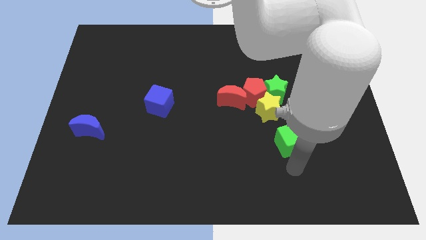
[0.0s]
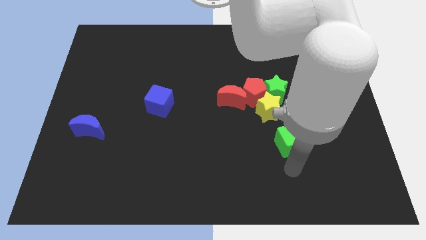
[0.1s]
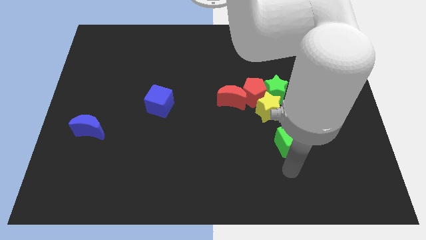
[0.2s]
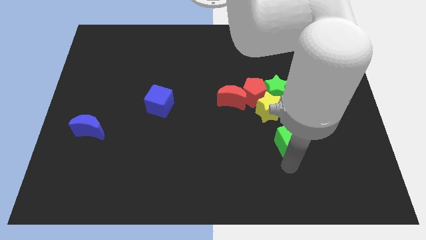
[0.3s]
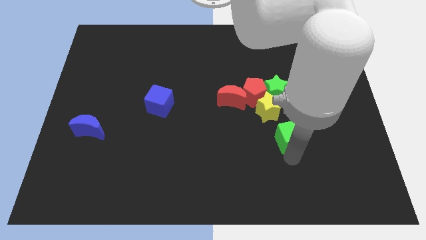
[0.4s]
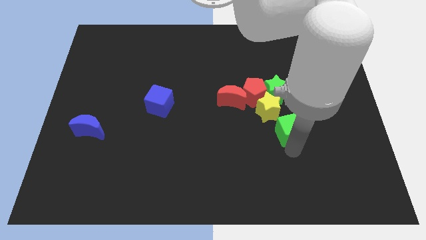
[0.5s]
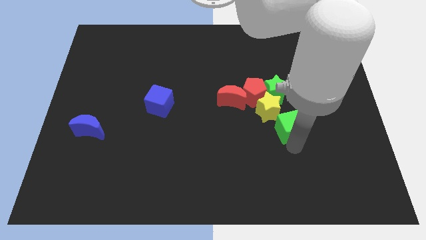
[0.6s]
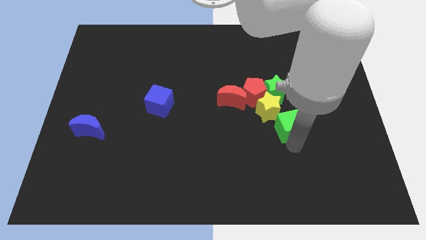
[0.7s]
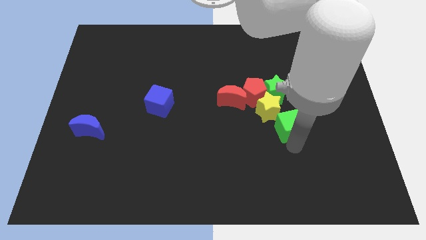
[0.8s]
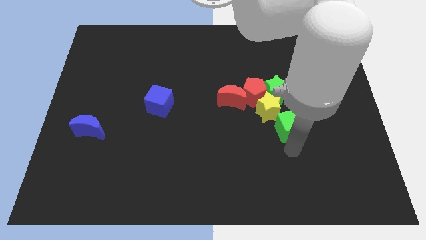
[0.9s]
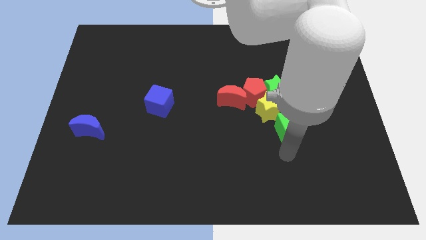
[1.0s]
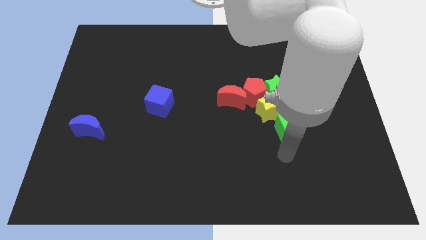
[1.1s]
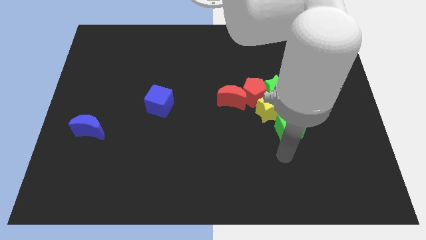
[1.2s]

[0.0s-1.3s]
take the green cube close to the yellow star

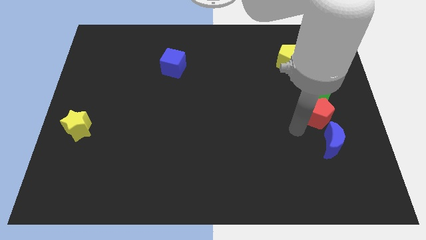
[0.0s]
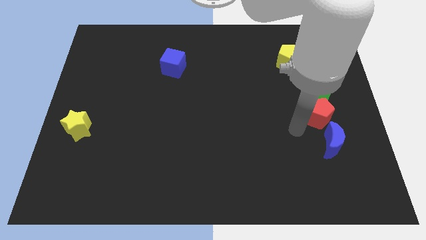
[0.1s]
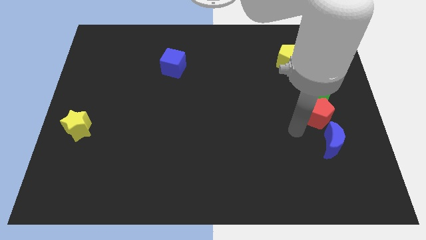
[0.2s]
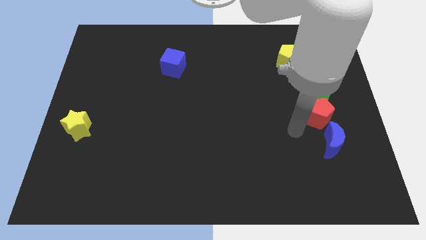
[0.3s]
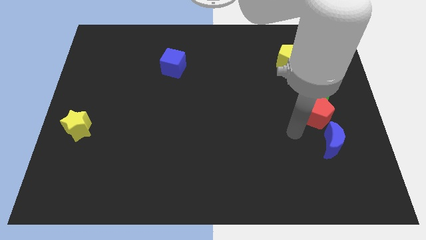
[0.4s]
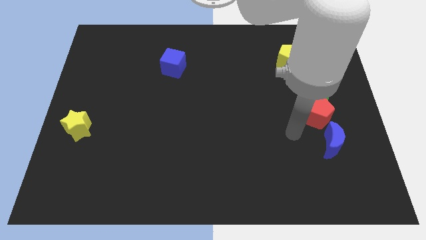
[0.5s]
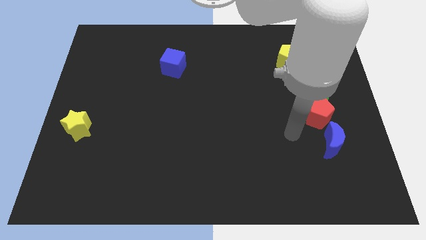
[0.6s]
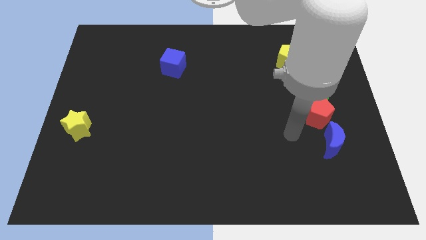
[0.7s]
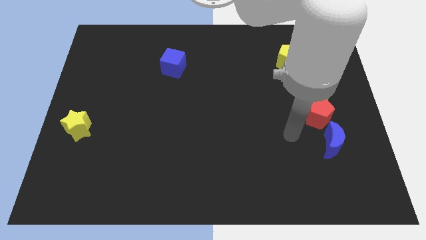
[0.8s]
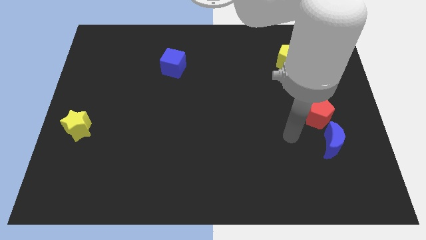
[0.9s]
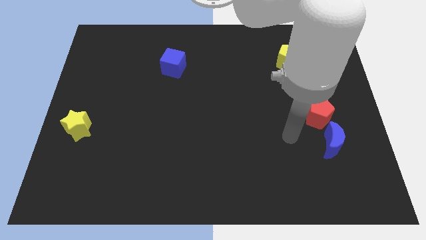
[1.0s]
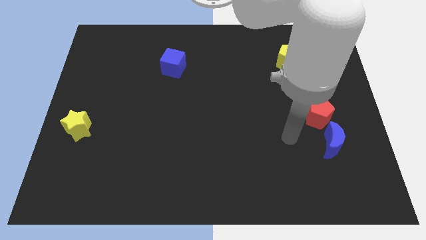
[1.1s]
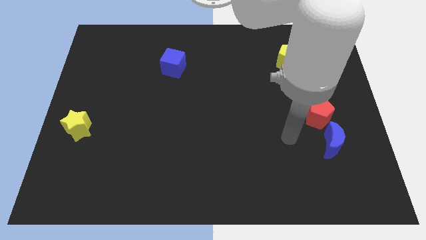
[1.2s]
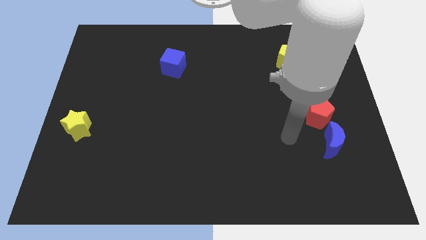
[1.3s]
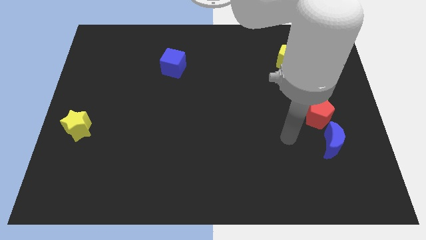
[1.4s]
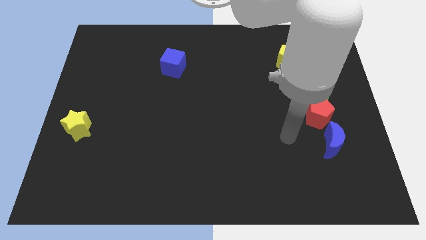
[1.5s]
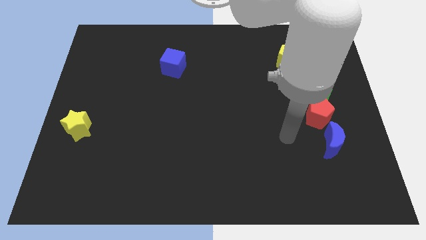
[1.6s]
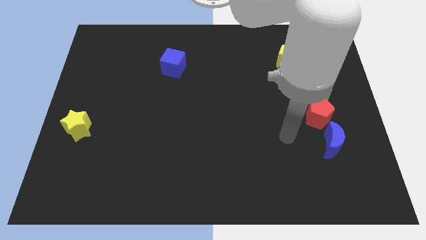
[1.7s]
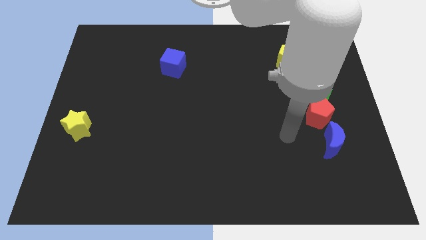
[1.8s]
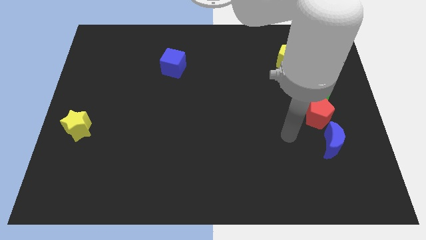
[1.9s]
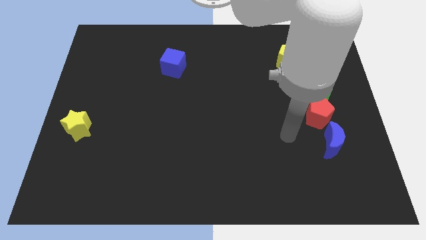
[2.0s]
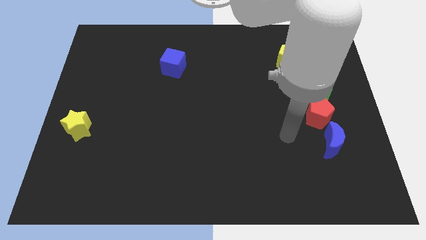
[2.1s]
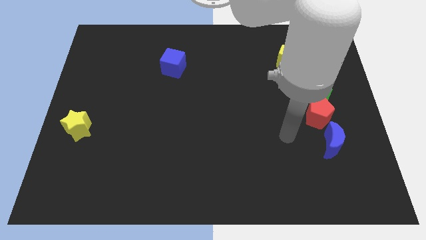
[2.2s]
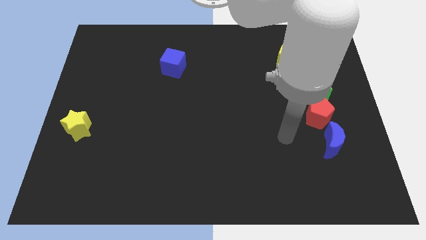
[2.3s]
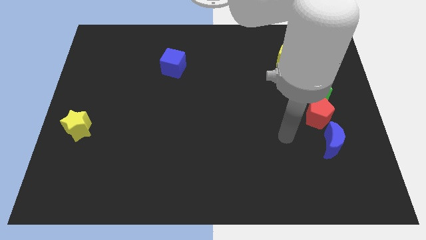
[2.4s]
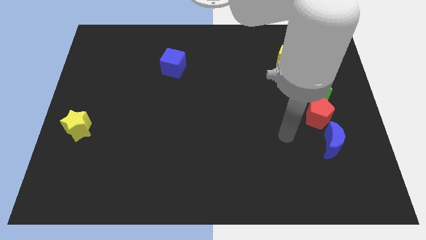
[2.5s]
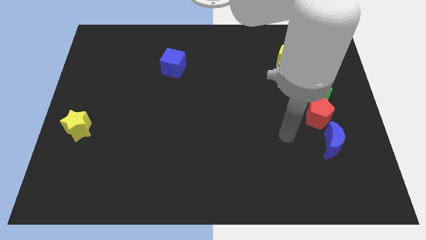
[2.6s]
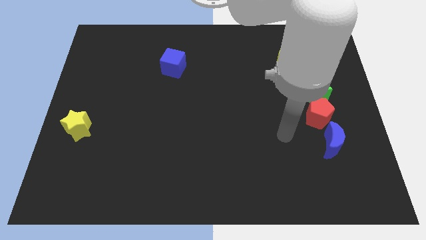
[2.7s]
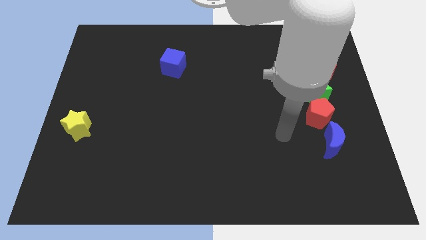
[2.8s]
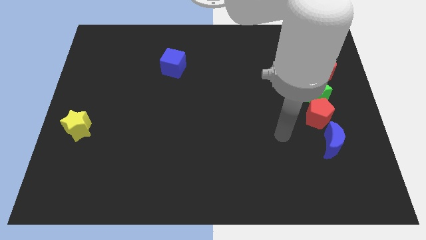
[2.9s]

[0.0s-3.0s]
arm is moving away from the red pentagon

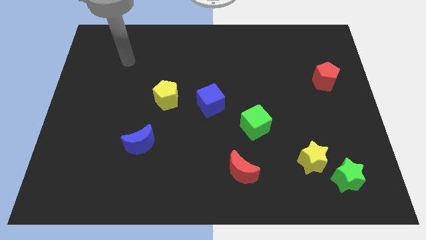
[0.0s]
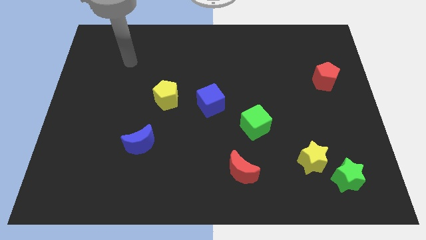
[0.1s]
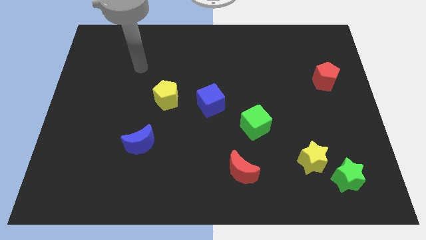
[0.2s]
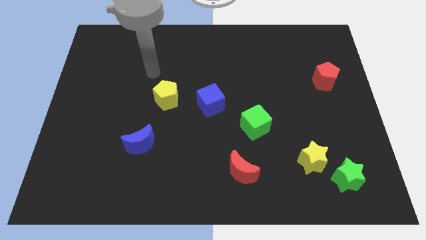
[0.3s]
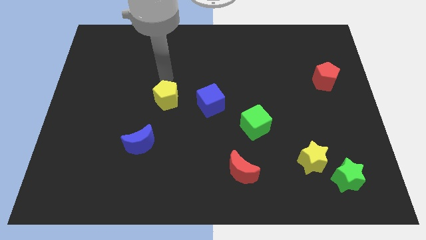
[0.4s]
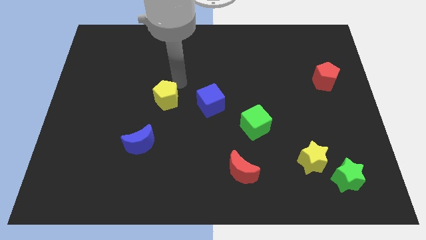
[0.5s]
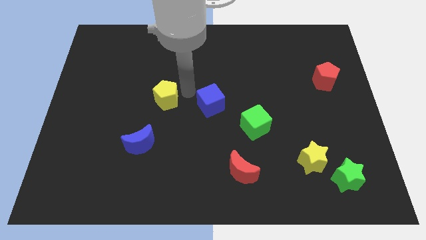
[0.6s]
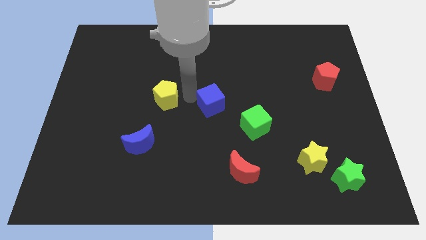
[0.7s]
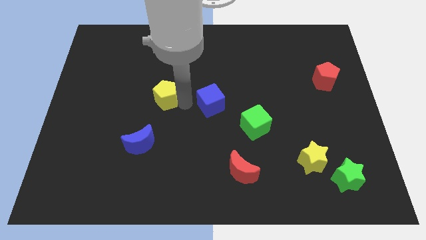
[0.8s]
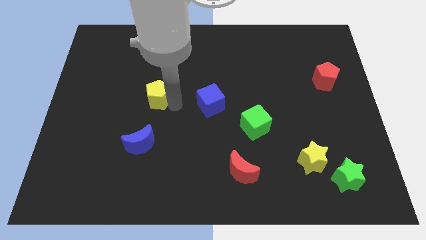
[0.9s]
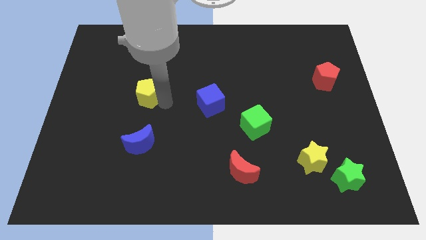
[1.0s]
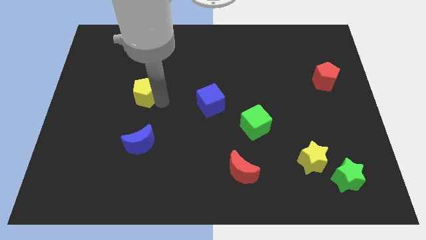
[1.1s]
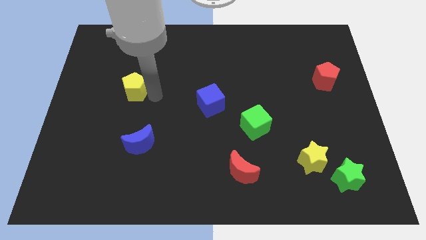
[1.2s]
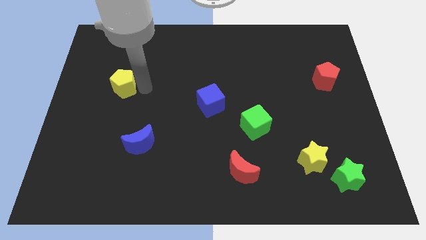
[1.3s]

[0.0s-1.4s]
push the yellow pentagon to the left side of the table

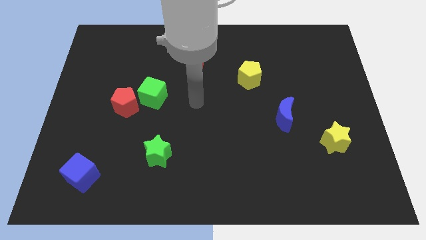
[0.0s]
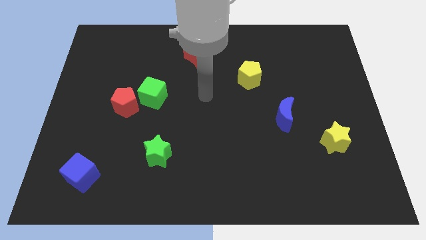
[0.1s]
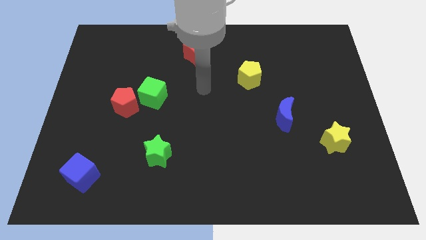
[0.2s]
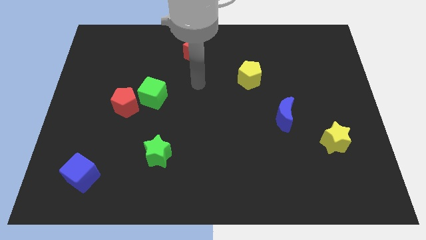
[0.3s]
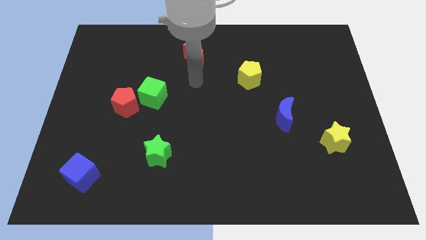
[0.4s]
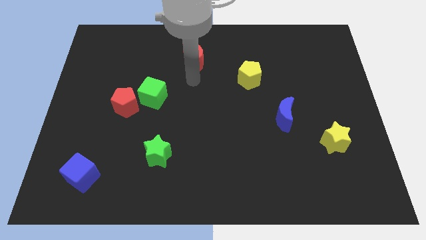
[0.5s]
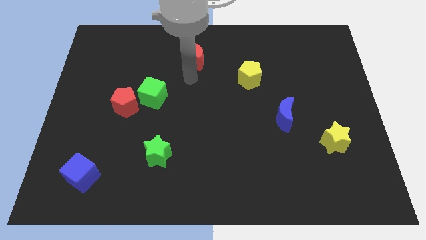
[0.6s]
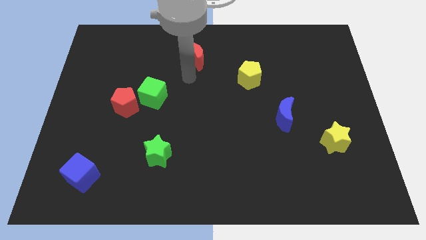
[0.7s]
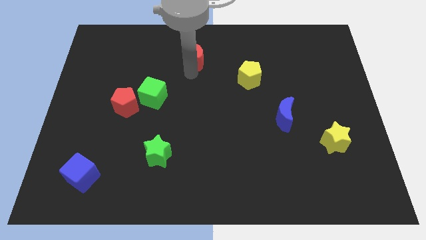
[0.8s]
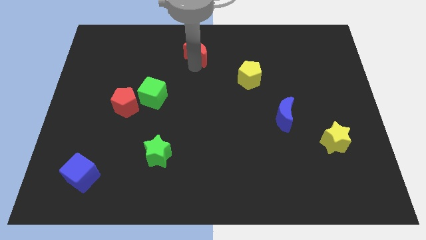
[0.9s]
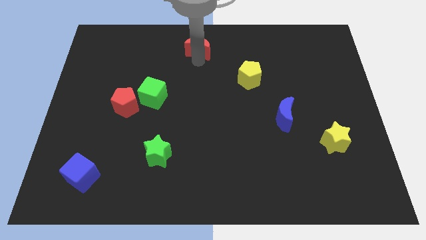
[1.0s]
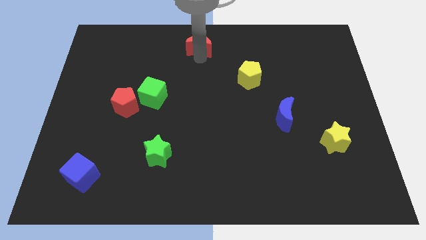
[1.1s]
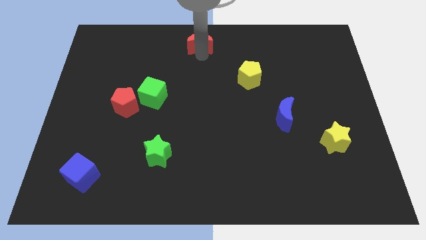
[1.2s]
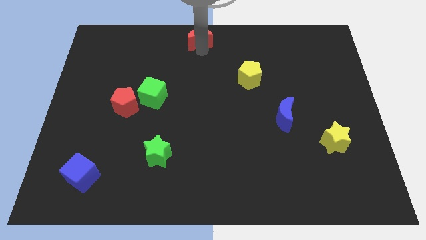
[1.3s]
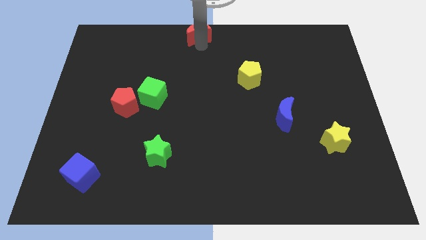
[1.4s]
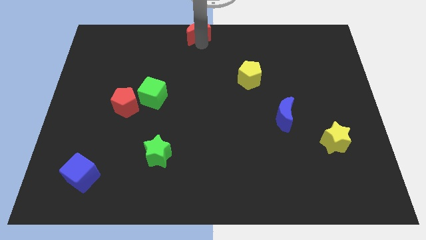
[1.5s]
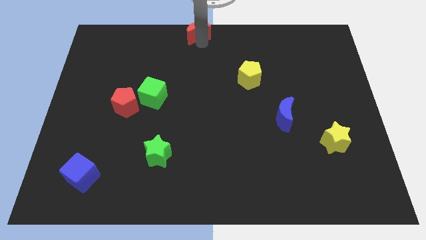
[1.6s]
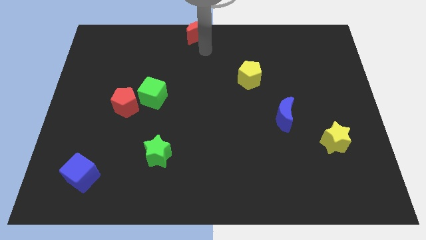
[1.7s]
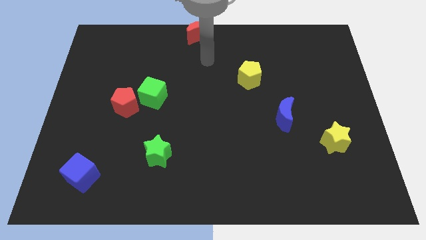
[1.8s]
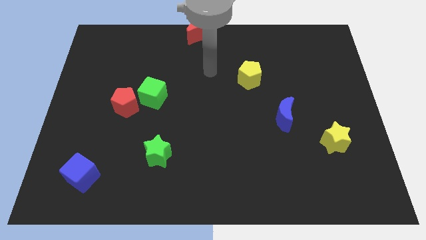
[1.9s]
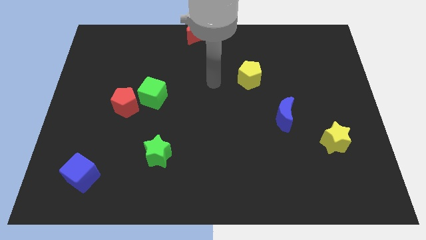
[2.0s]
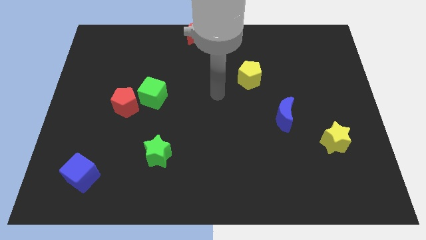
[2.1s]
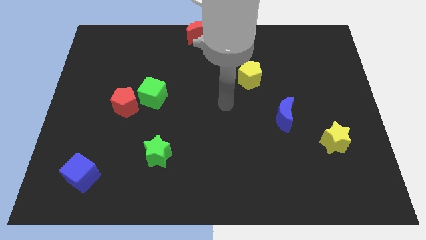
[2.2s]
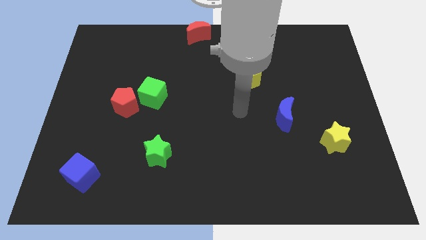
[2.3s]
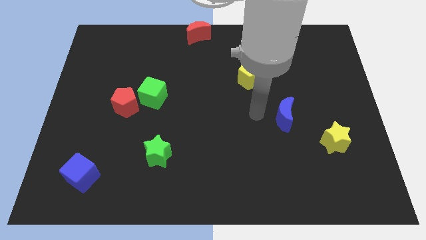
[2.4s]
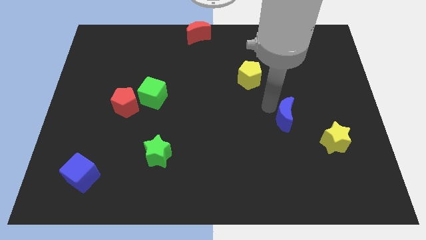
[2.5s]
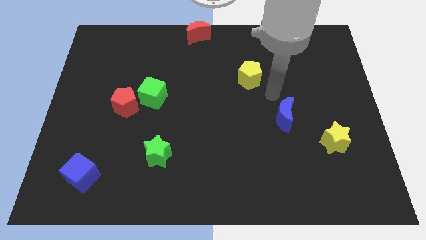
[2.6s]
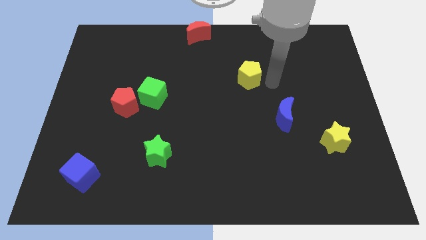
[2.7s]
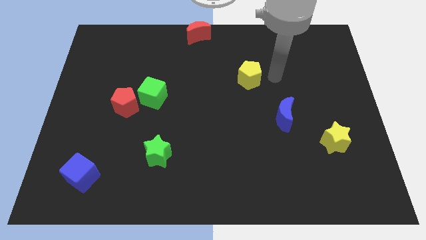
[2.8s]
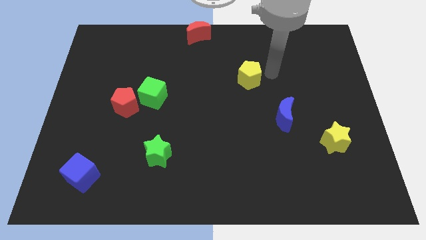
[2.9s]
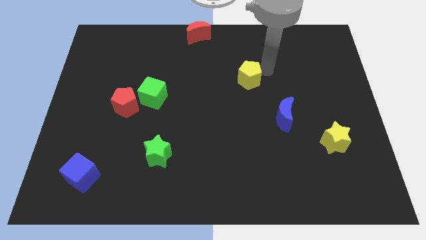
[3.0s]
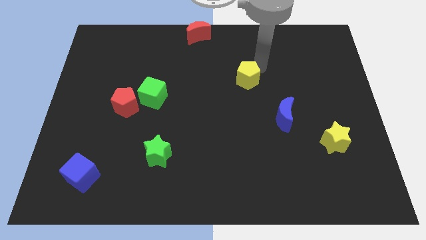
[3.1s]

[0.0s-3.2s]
move the red moon to the top middle of the board

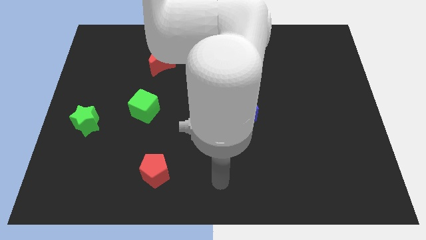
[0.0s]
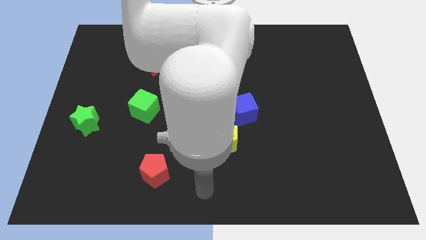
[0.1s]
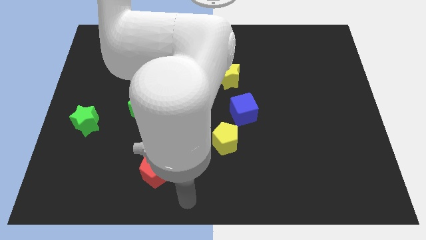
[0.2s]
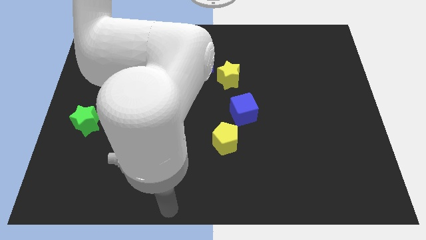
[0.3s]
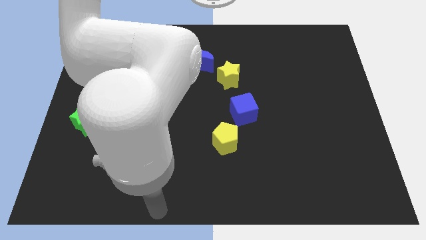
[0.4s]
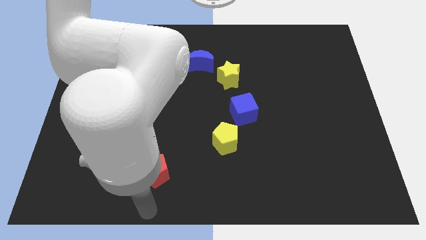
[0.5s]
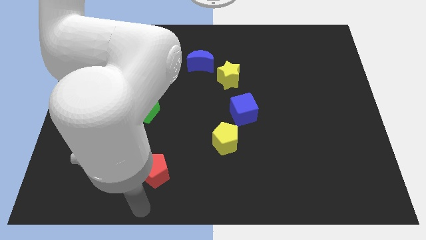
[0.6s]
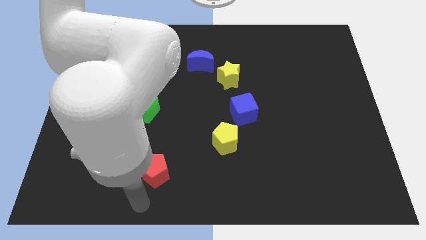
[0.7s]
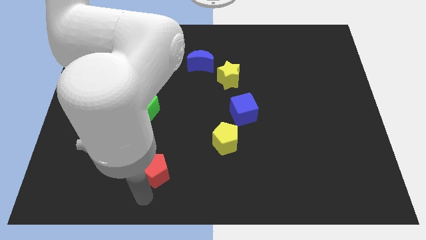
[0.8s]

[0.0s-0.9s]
place the arm down to the red pentagon
